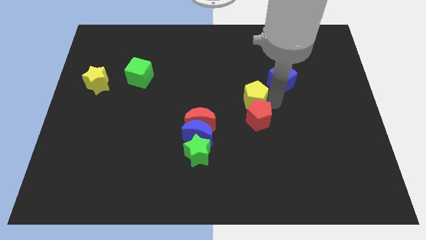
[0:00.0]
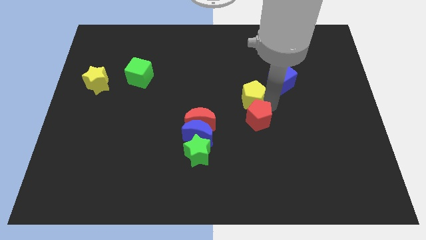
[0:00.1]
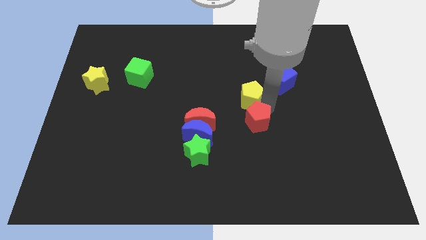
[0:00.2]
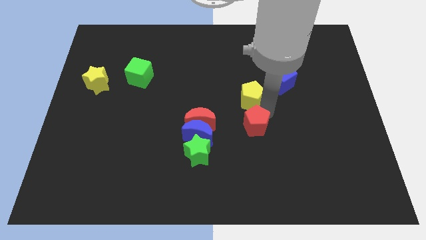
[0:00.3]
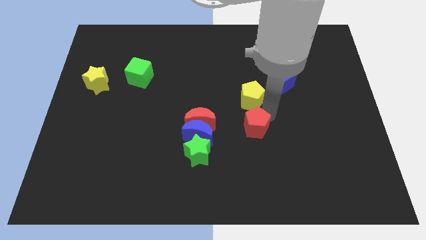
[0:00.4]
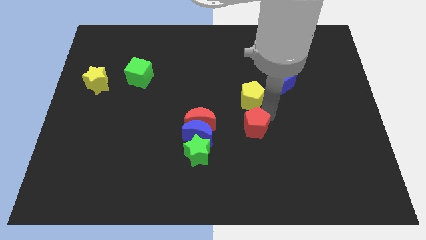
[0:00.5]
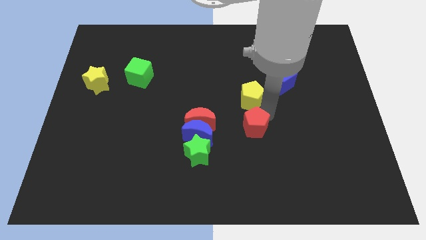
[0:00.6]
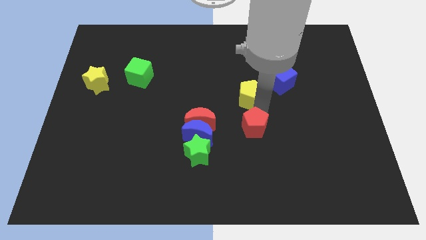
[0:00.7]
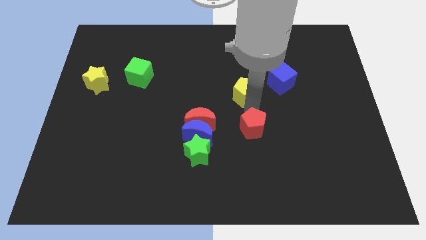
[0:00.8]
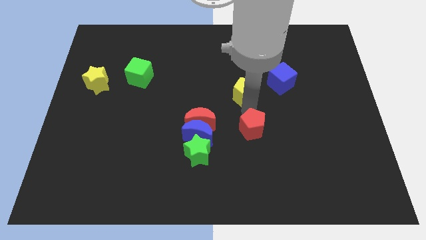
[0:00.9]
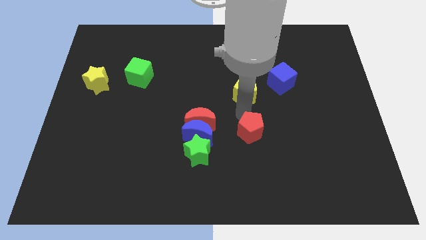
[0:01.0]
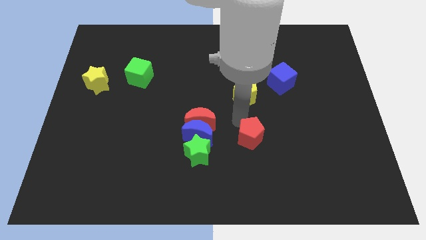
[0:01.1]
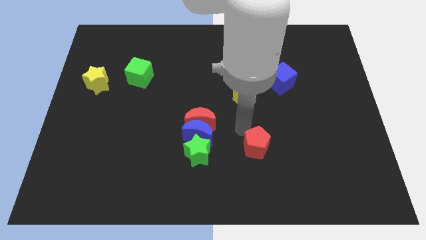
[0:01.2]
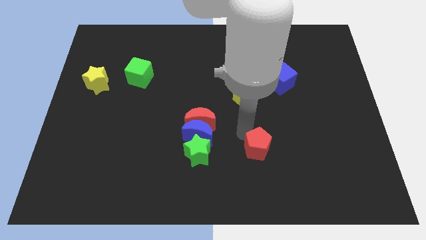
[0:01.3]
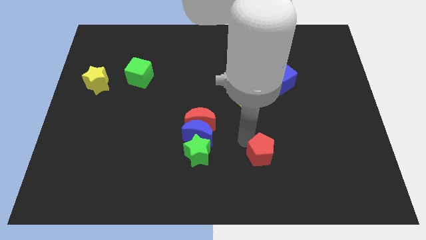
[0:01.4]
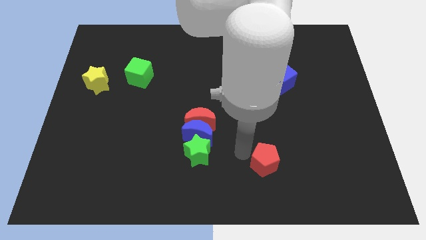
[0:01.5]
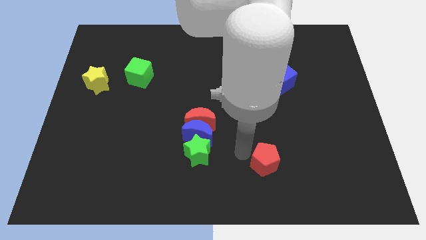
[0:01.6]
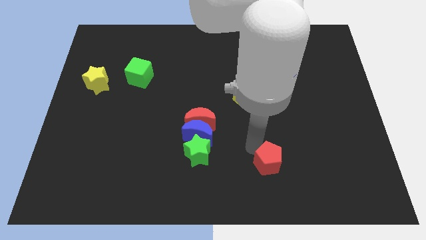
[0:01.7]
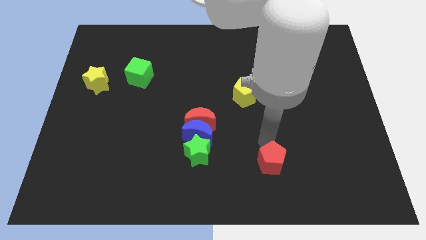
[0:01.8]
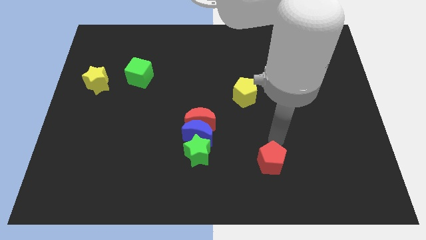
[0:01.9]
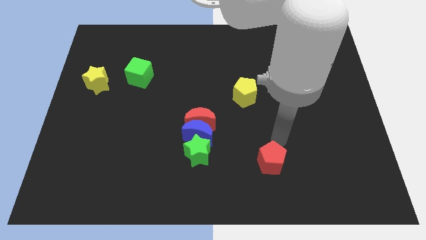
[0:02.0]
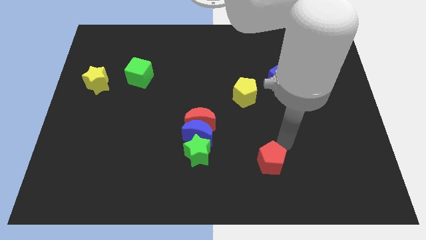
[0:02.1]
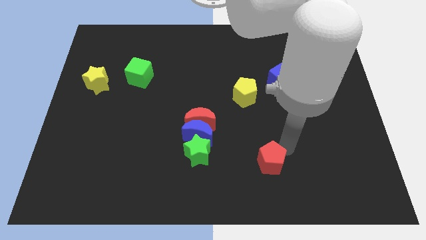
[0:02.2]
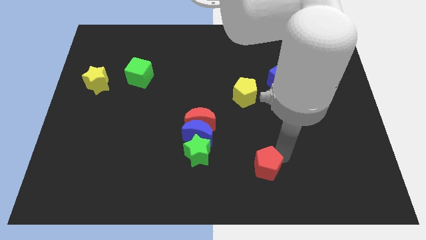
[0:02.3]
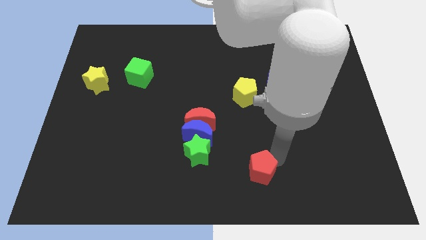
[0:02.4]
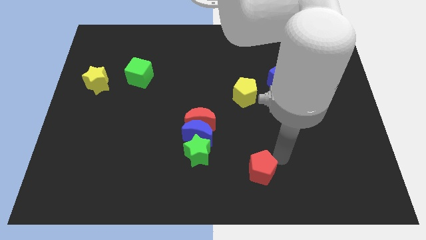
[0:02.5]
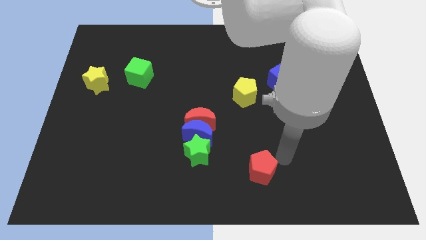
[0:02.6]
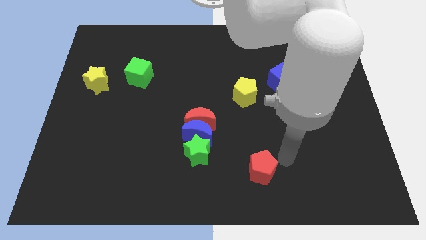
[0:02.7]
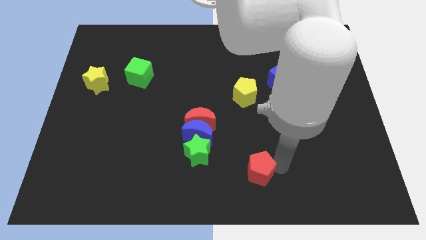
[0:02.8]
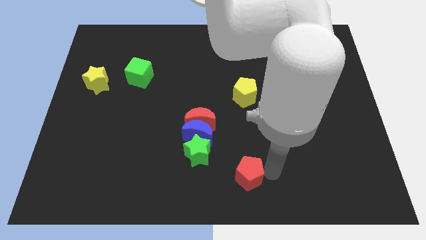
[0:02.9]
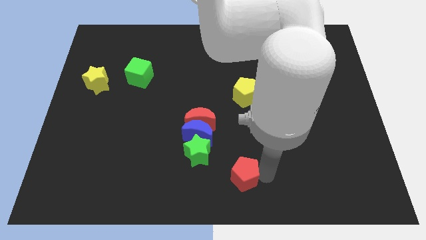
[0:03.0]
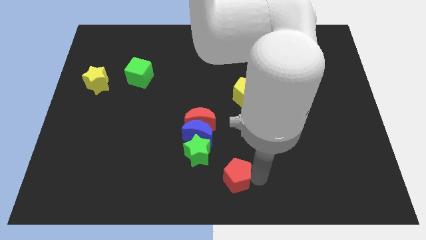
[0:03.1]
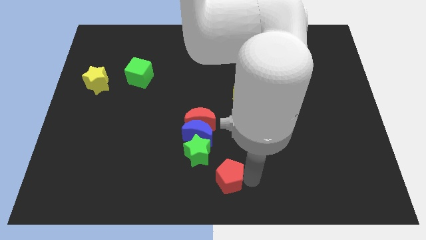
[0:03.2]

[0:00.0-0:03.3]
move the red and the yellow pentagon away from each other

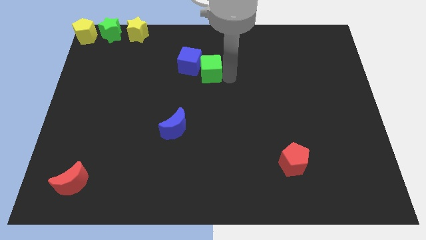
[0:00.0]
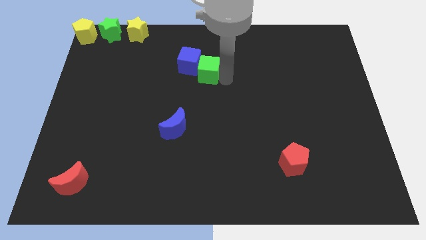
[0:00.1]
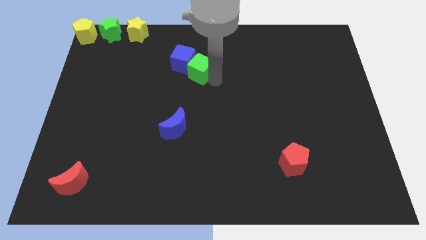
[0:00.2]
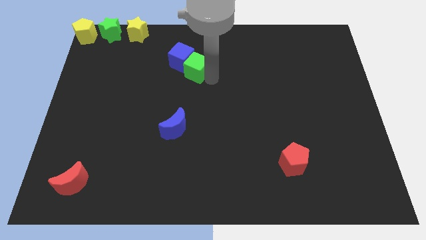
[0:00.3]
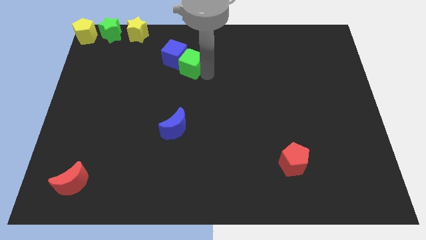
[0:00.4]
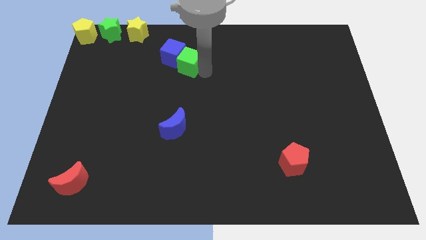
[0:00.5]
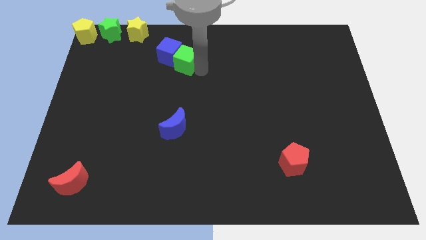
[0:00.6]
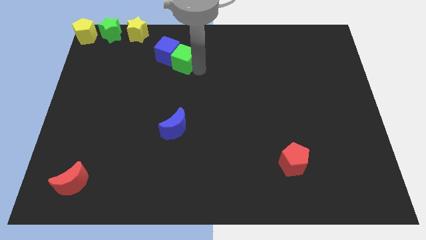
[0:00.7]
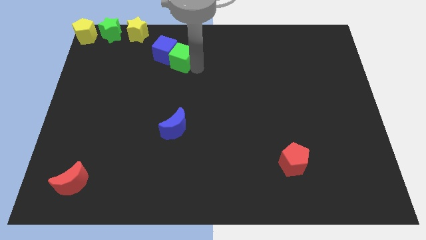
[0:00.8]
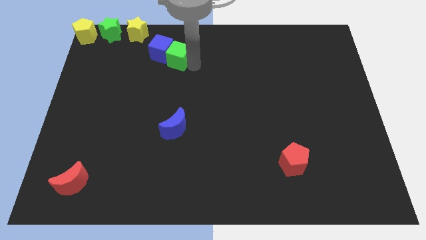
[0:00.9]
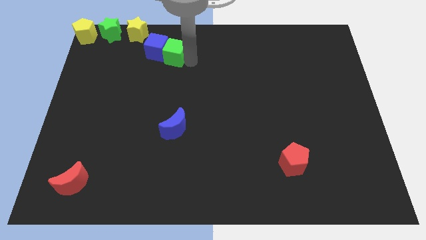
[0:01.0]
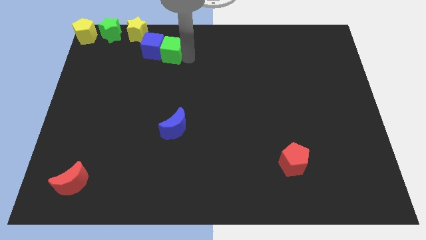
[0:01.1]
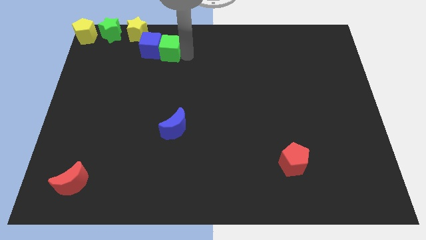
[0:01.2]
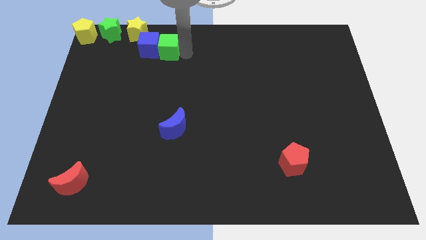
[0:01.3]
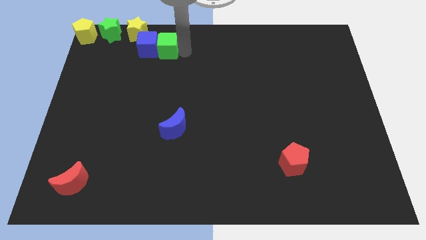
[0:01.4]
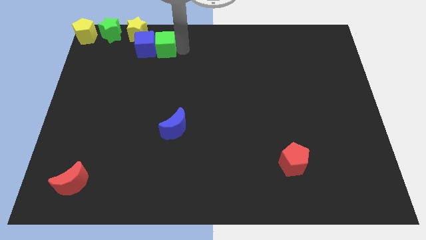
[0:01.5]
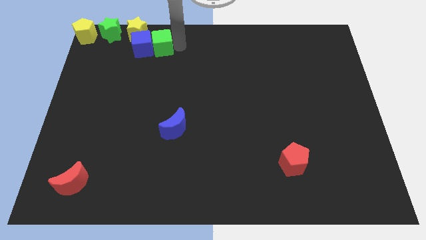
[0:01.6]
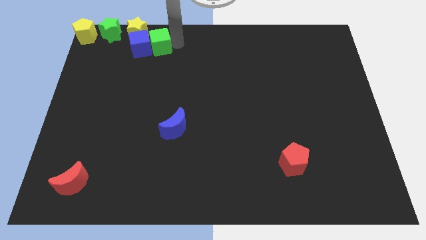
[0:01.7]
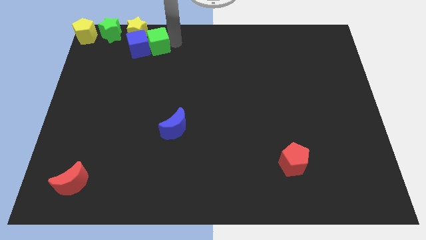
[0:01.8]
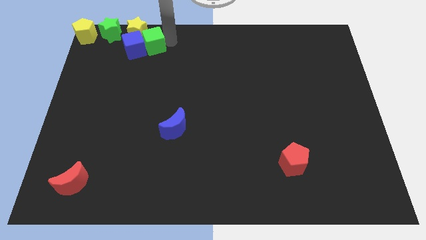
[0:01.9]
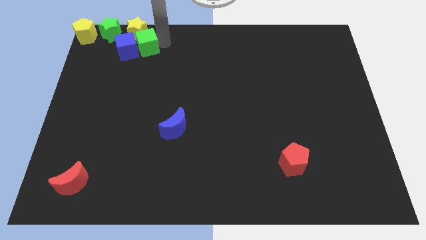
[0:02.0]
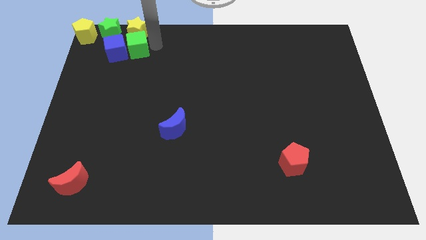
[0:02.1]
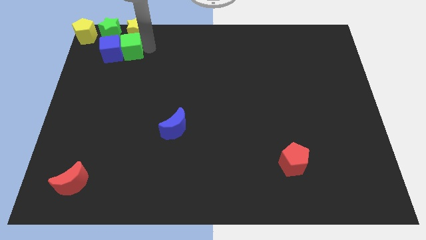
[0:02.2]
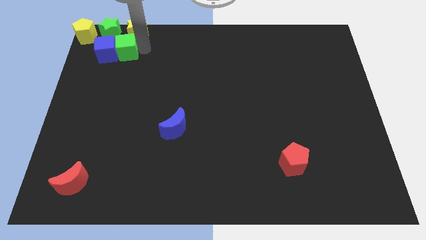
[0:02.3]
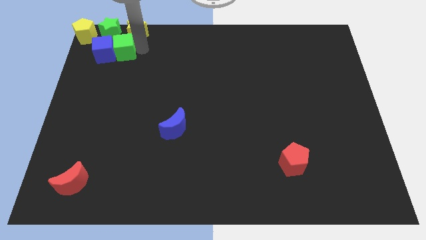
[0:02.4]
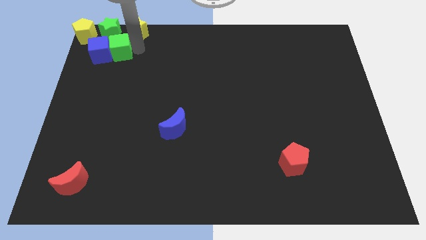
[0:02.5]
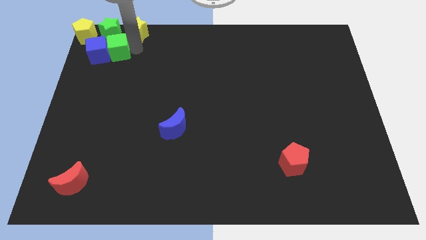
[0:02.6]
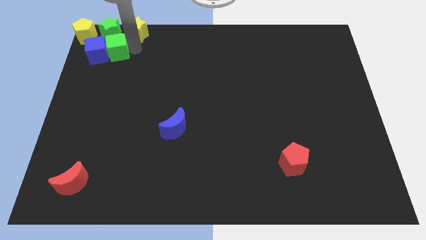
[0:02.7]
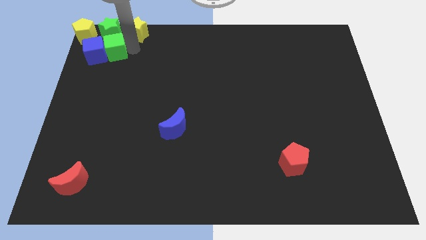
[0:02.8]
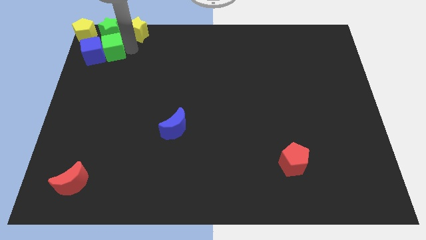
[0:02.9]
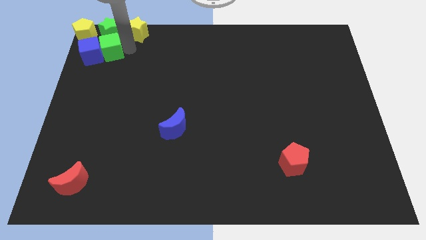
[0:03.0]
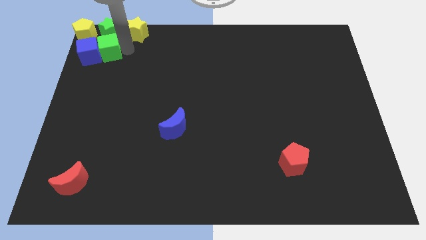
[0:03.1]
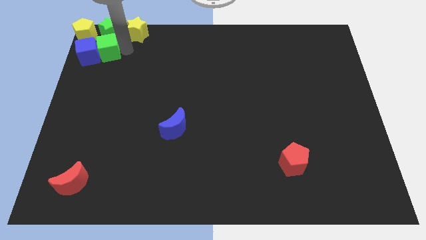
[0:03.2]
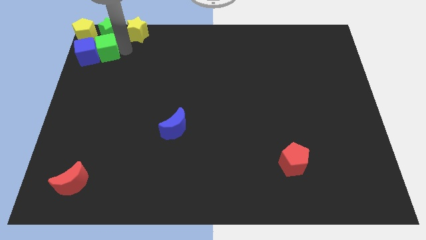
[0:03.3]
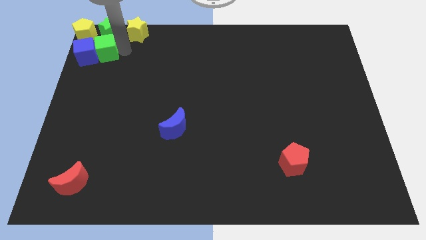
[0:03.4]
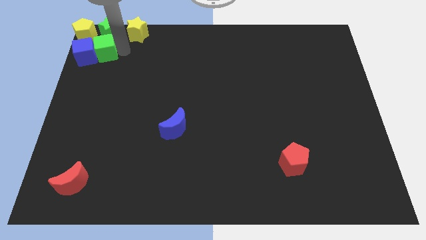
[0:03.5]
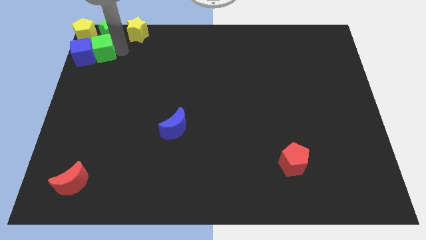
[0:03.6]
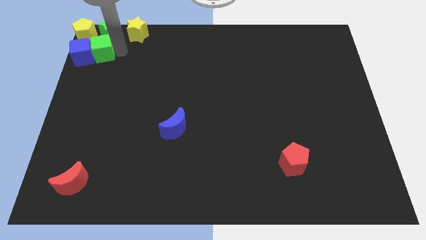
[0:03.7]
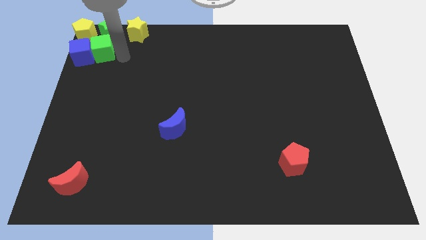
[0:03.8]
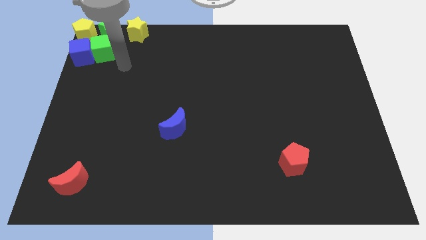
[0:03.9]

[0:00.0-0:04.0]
move the green cube along with blue cube to the top left of the board

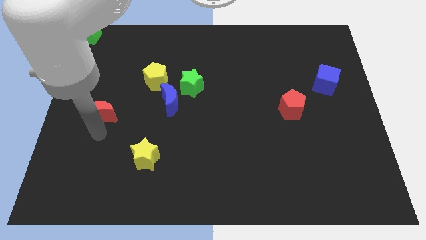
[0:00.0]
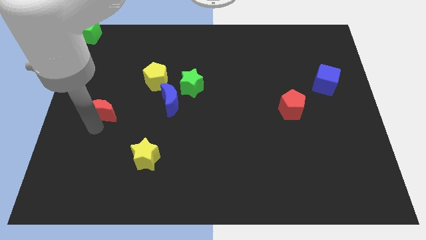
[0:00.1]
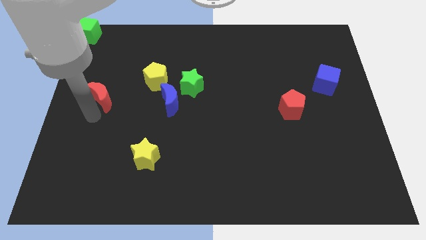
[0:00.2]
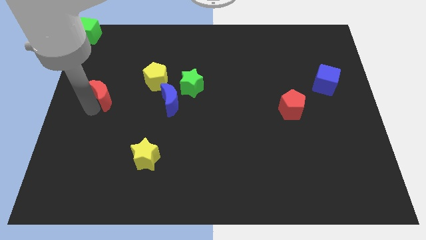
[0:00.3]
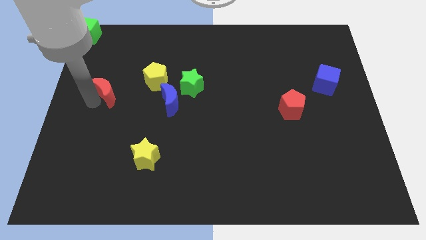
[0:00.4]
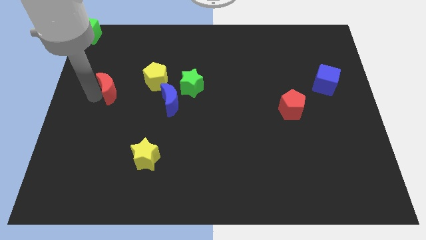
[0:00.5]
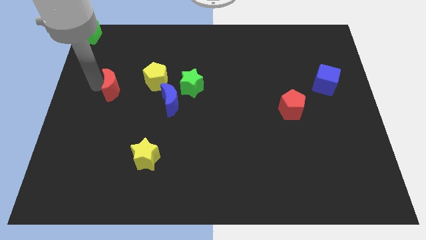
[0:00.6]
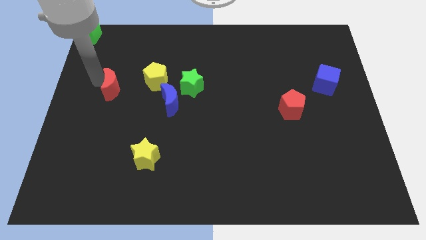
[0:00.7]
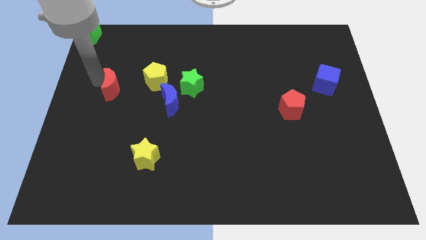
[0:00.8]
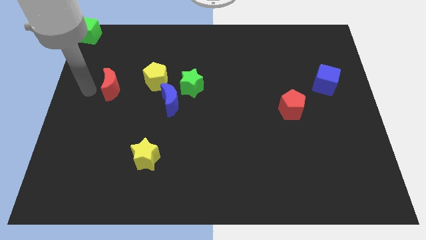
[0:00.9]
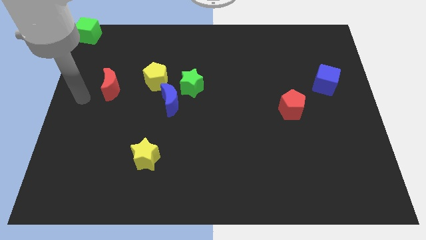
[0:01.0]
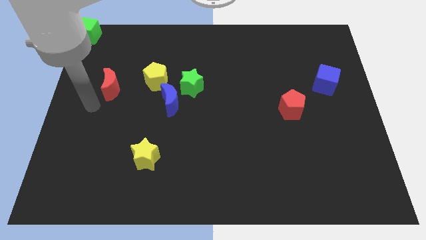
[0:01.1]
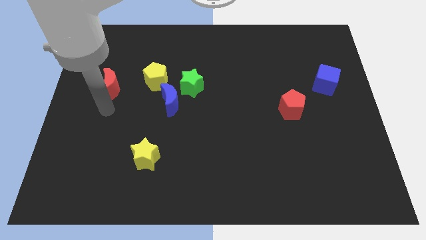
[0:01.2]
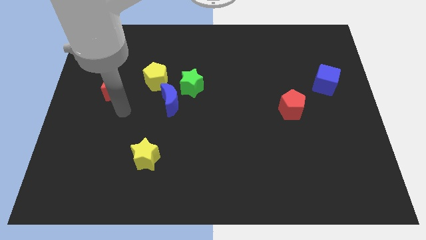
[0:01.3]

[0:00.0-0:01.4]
place the red moon left to the yellow pentagon

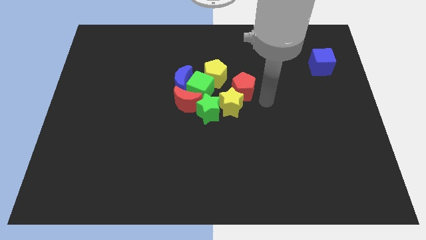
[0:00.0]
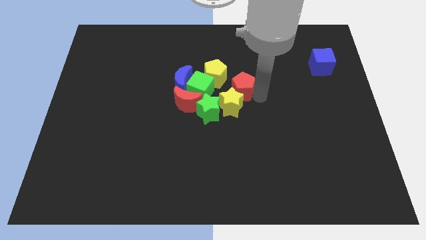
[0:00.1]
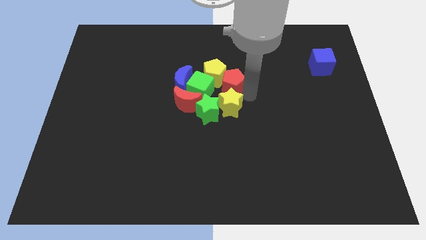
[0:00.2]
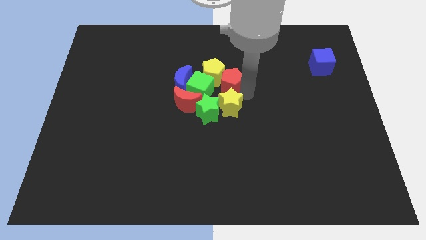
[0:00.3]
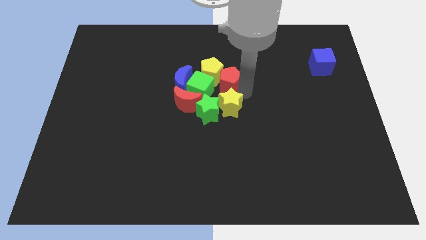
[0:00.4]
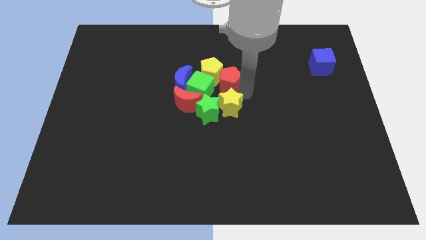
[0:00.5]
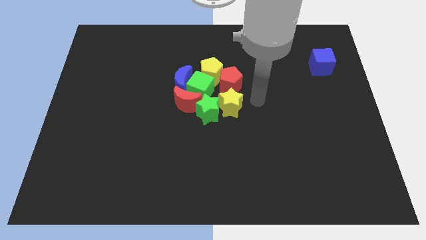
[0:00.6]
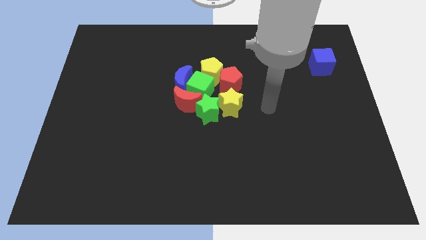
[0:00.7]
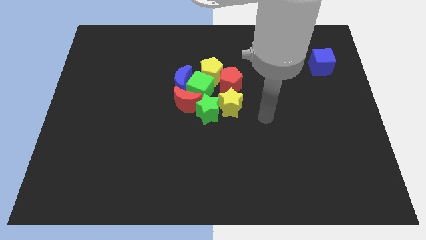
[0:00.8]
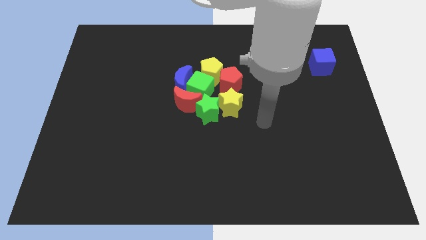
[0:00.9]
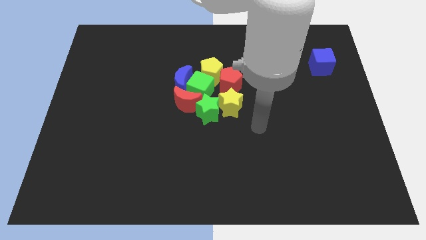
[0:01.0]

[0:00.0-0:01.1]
push the red pentagon into the yellow pentagon
